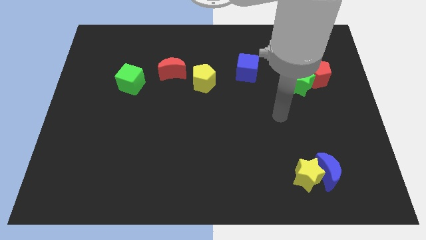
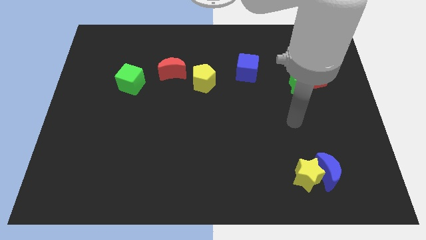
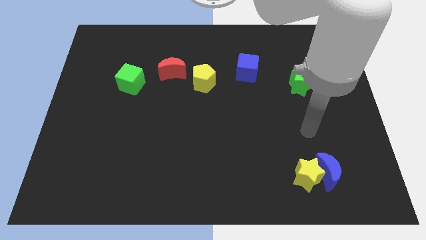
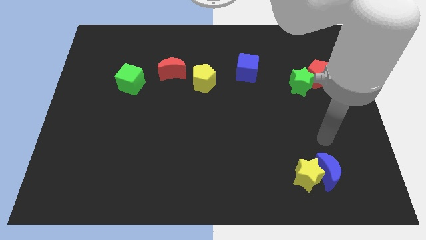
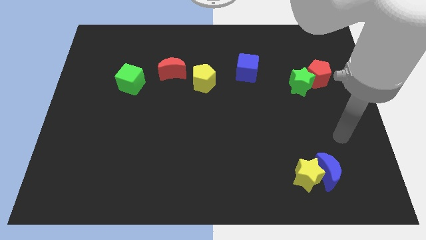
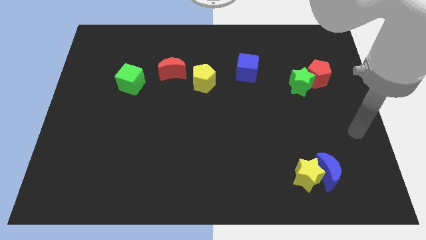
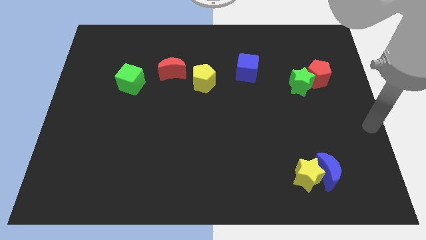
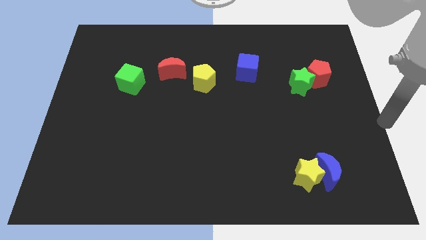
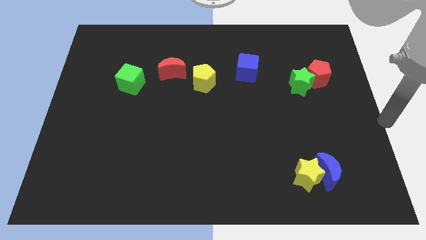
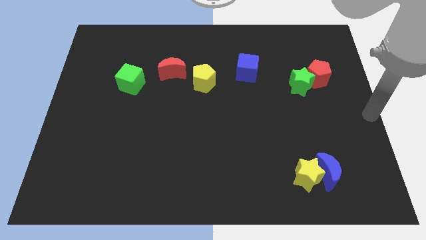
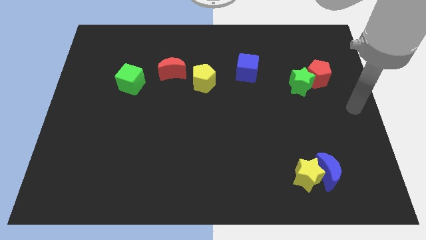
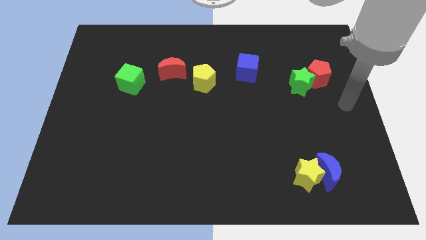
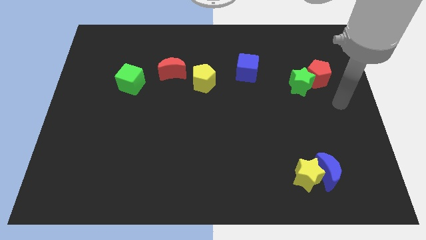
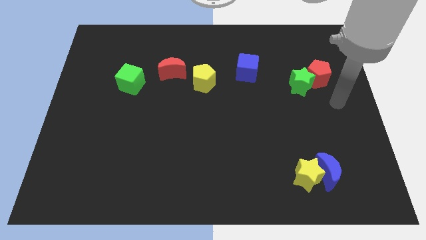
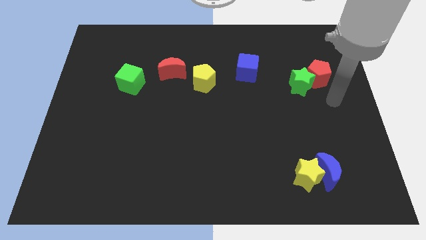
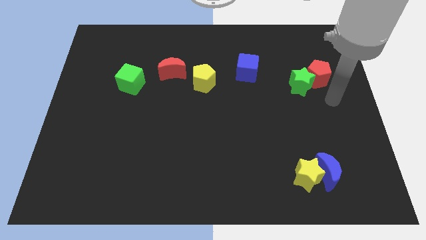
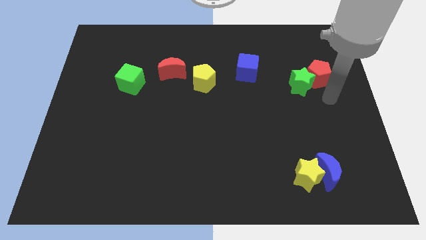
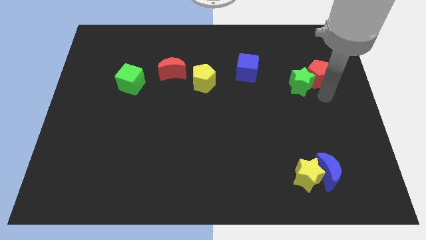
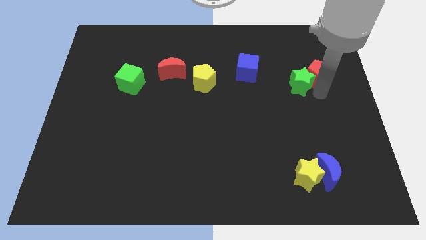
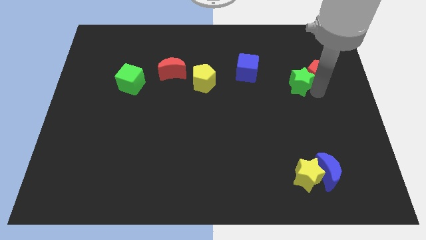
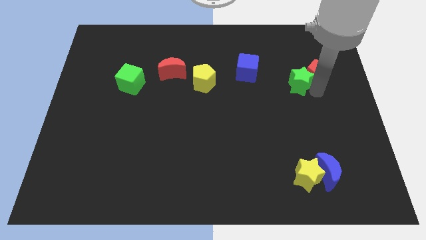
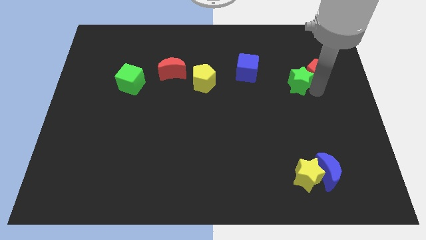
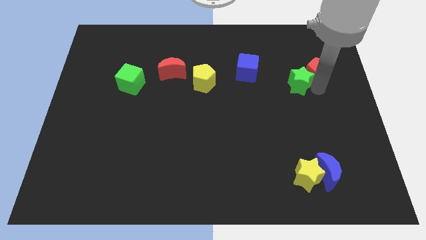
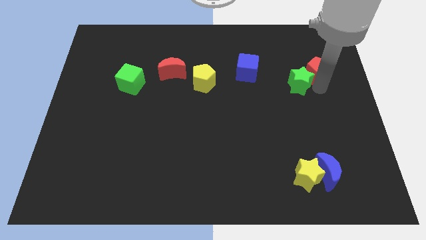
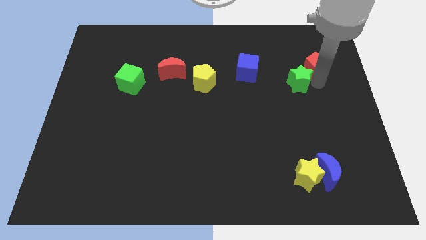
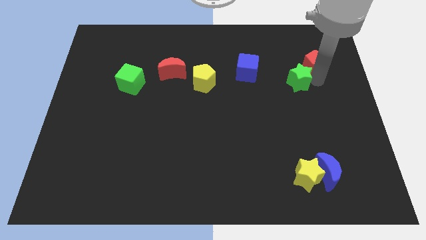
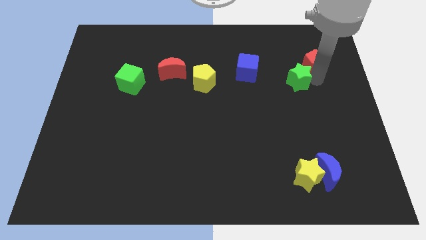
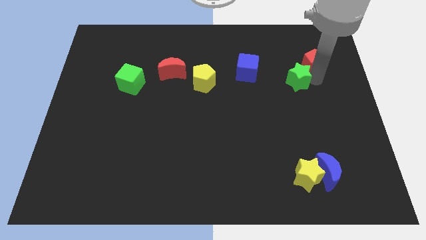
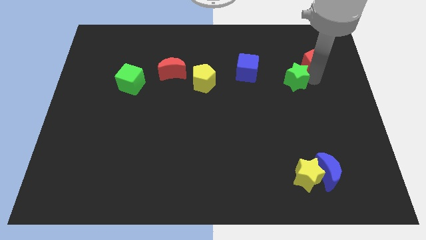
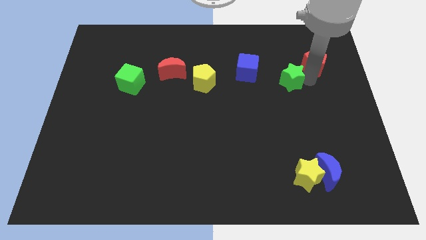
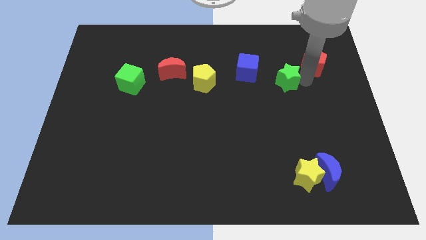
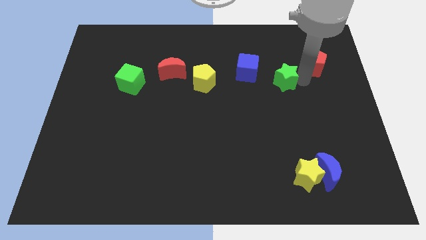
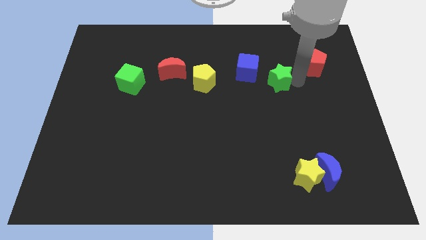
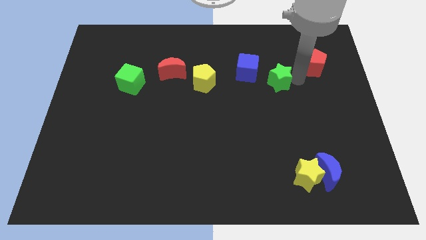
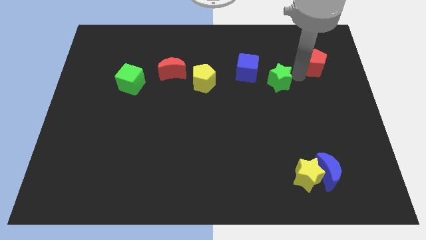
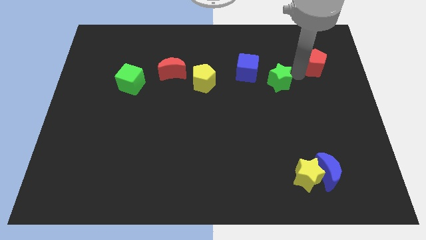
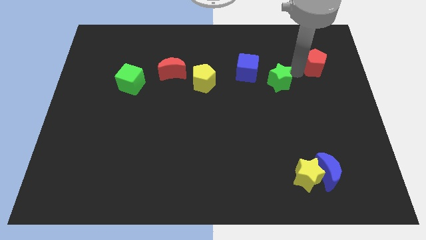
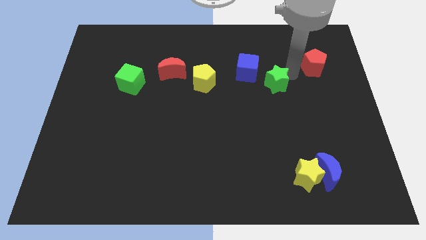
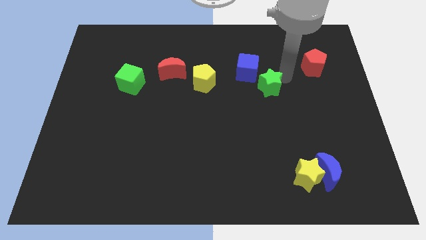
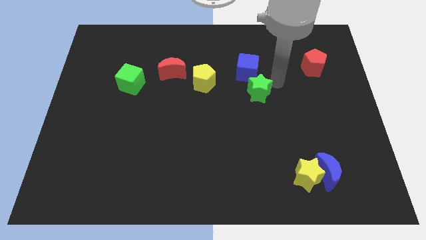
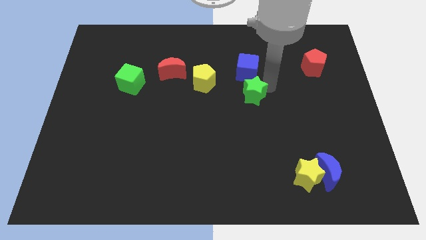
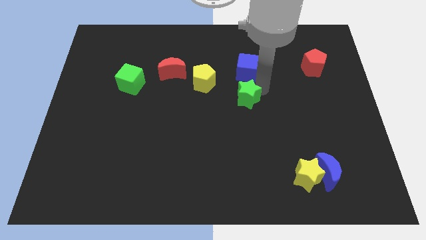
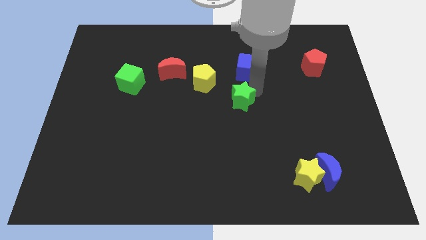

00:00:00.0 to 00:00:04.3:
place the green star below the blue cube

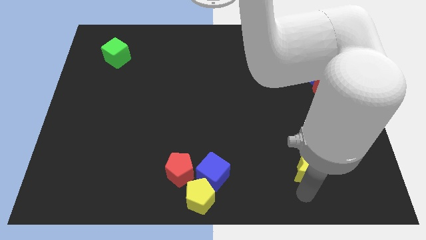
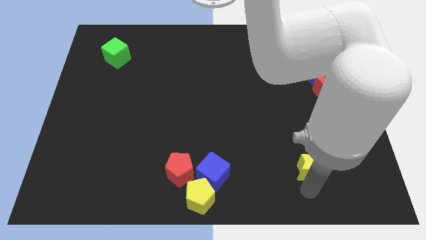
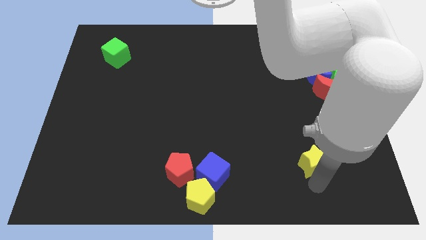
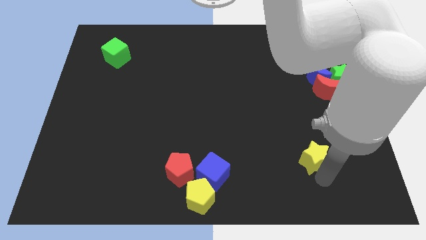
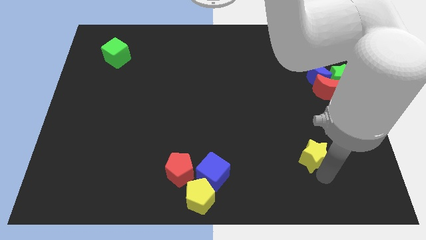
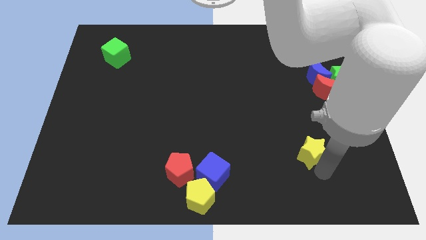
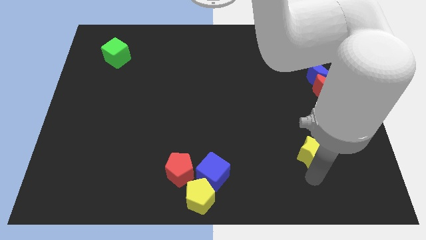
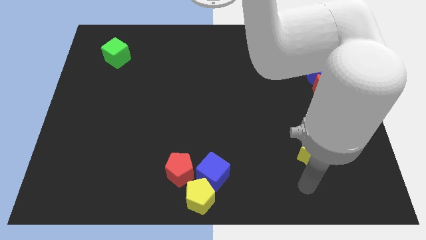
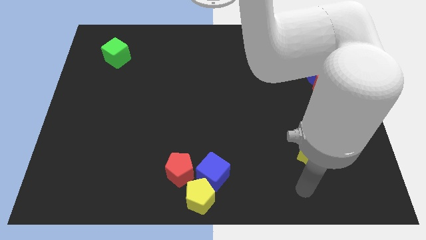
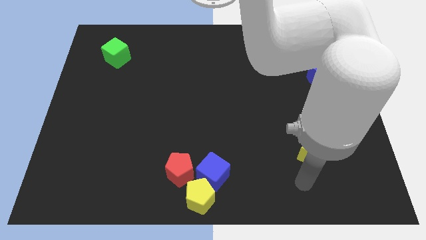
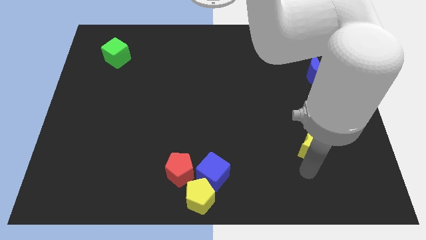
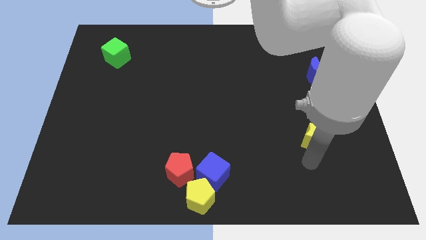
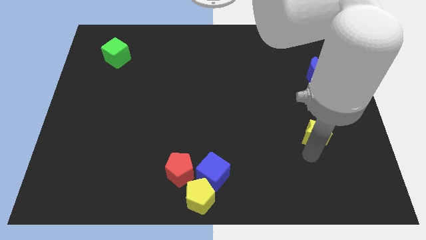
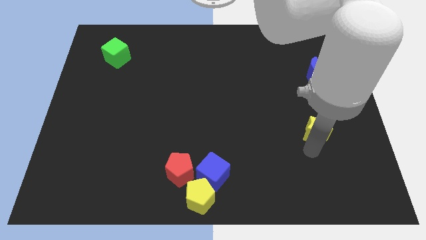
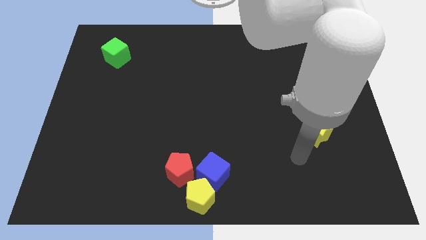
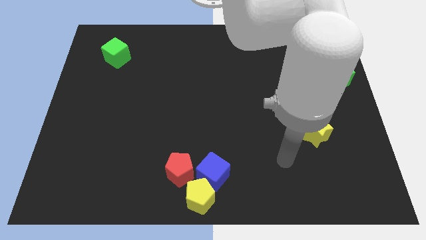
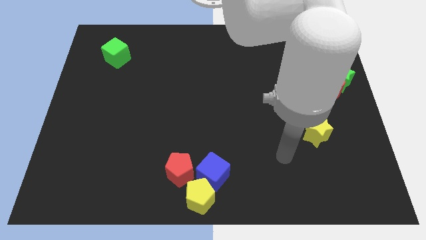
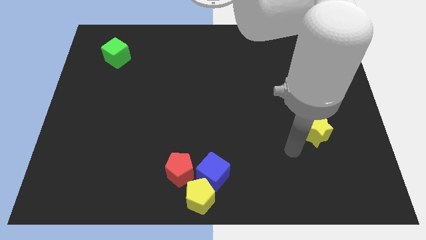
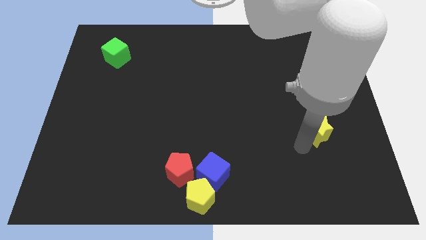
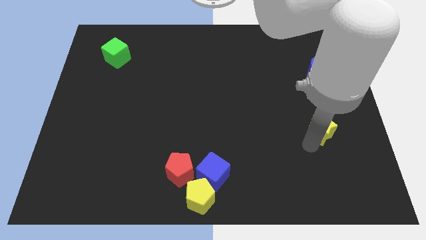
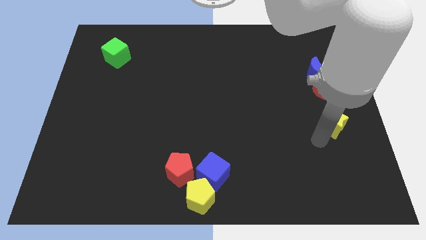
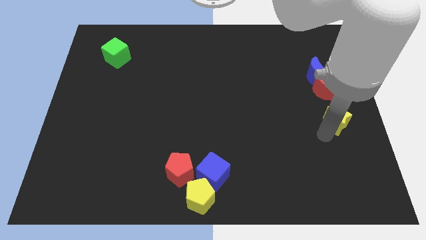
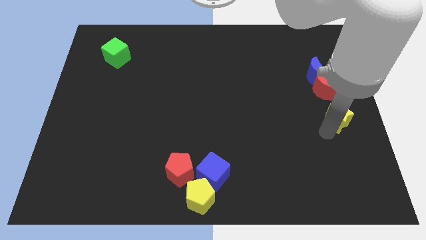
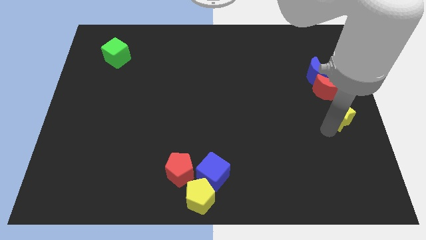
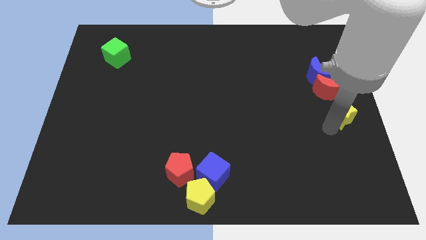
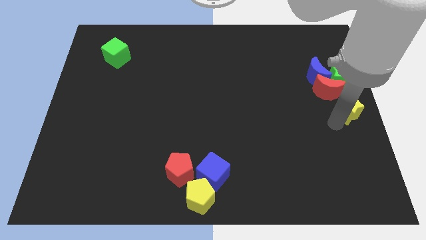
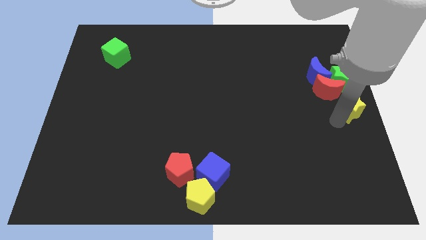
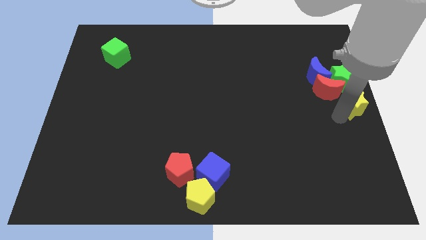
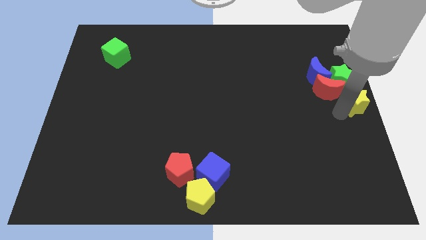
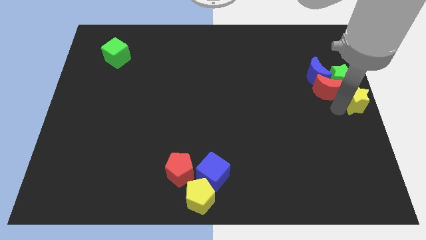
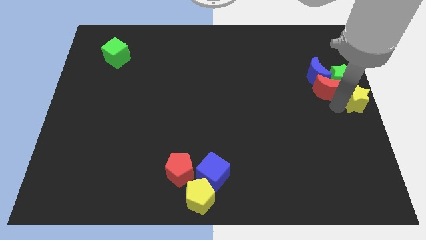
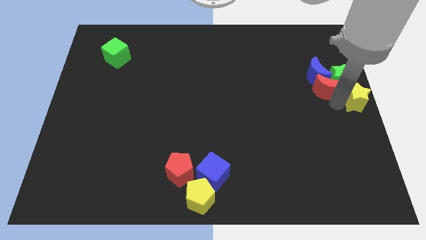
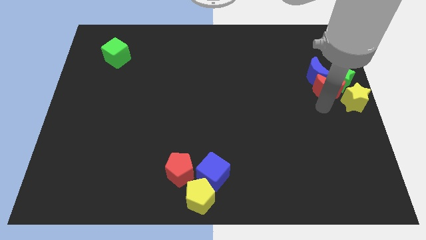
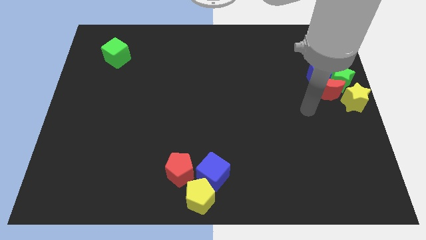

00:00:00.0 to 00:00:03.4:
push yellow star into the group of blocks at the right center

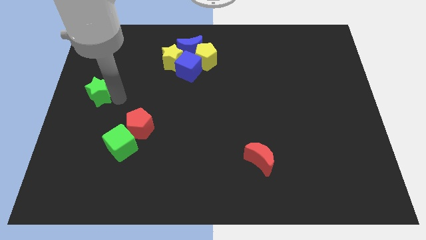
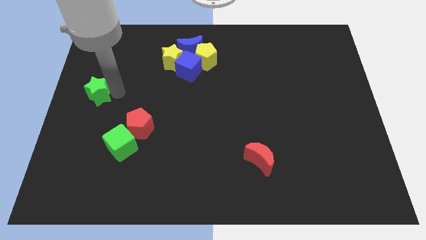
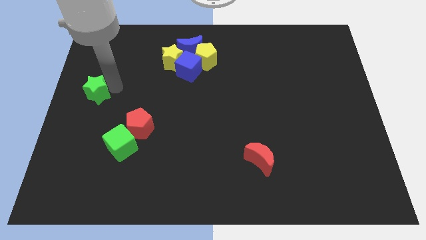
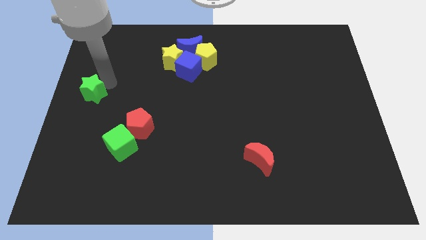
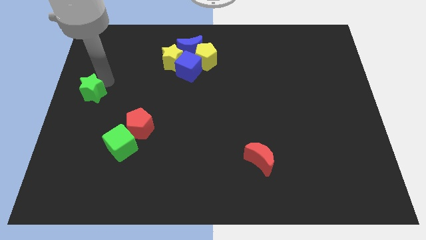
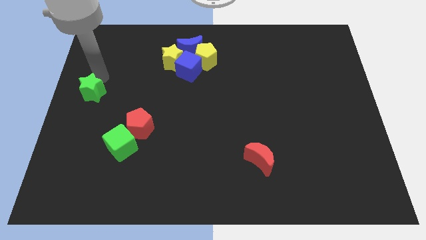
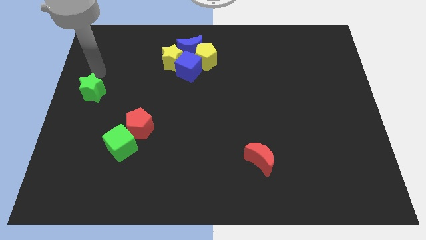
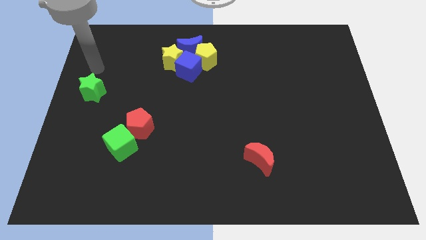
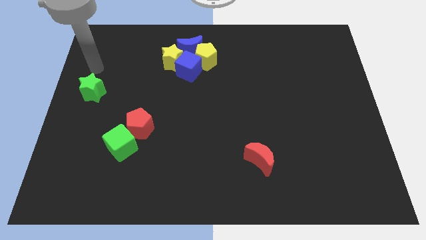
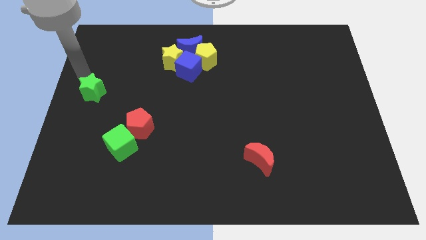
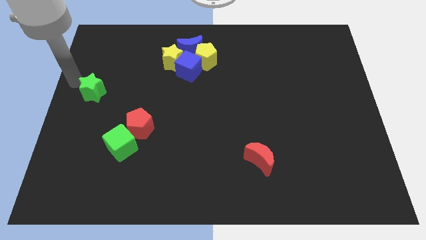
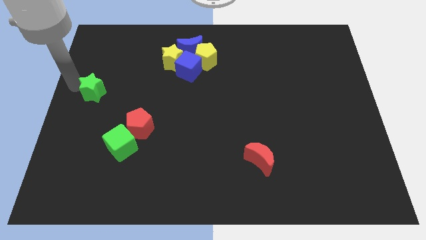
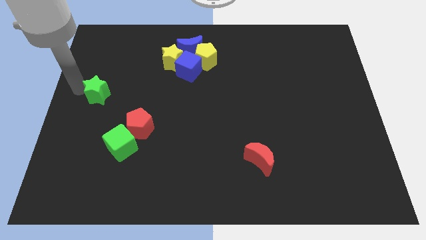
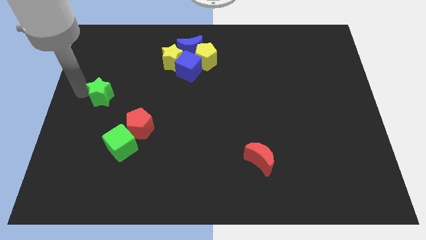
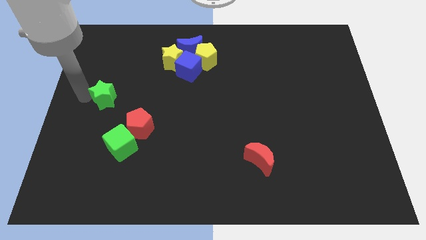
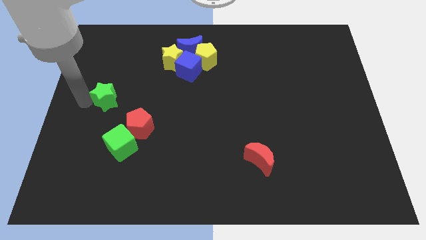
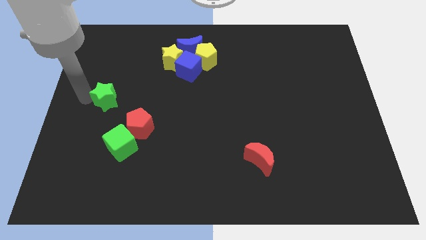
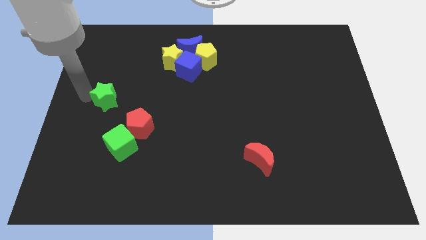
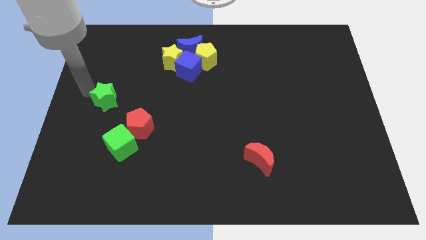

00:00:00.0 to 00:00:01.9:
move green star towards red pentagon
